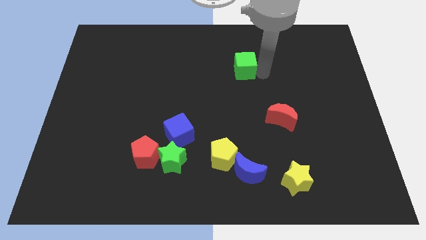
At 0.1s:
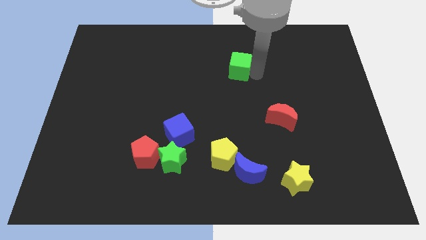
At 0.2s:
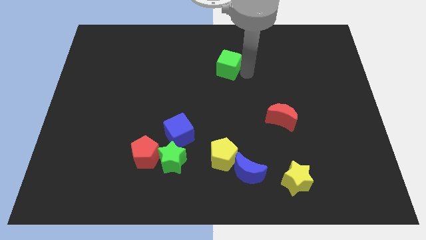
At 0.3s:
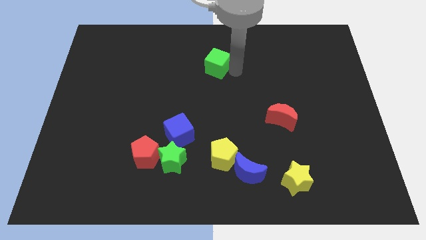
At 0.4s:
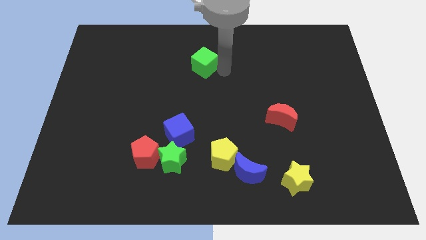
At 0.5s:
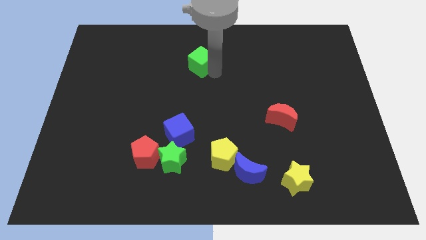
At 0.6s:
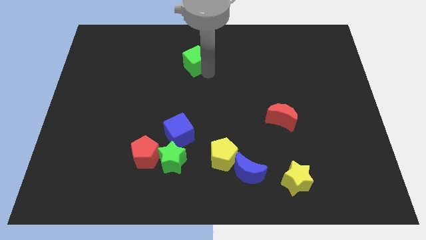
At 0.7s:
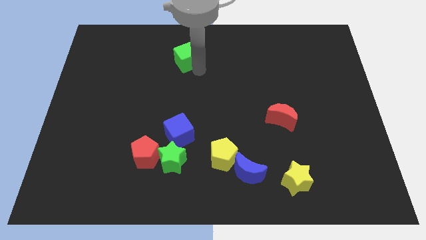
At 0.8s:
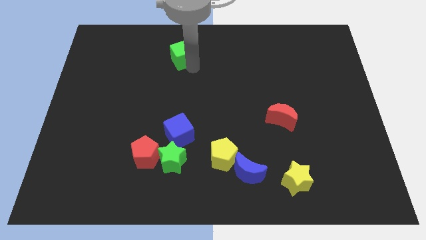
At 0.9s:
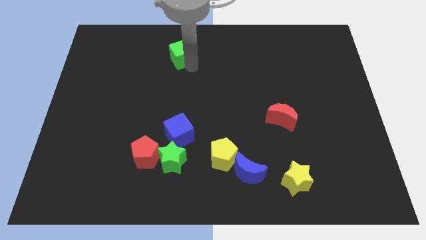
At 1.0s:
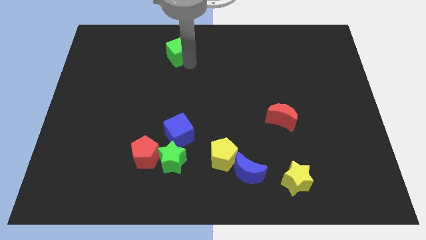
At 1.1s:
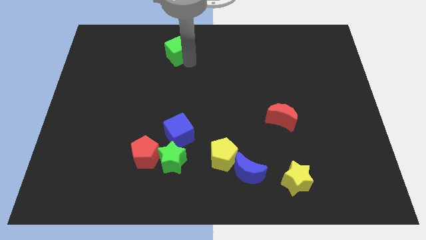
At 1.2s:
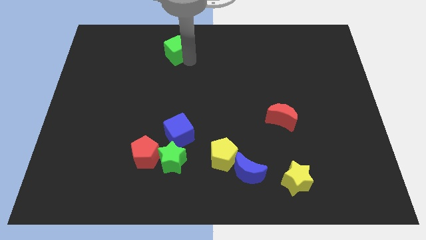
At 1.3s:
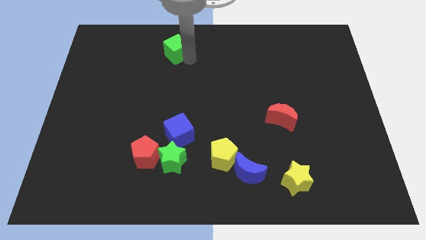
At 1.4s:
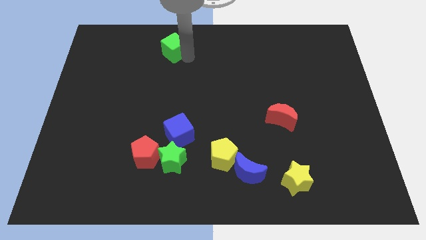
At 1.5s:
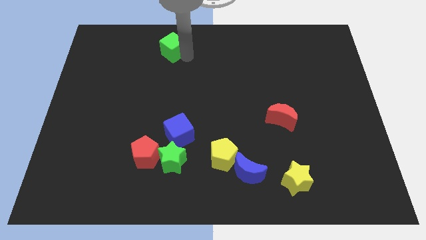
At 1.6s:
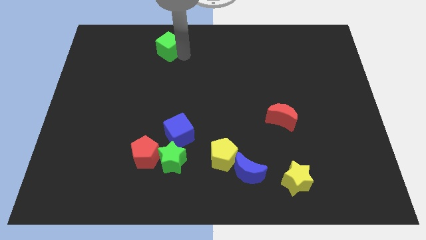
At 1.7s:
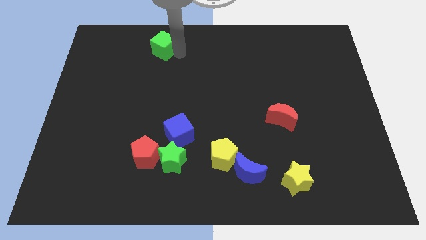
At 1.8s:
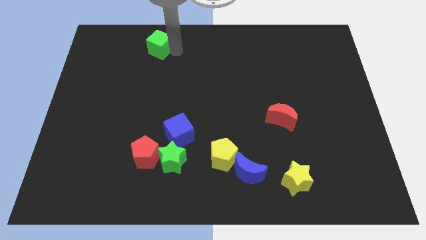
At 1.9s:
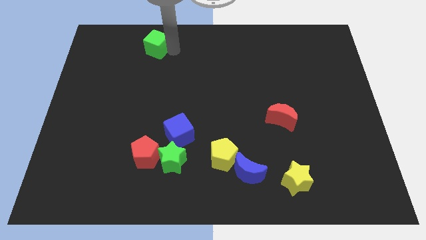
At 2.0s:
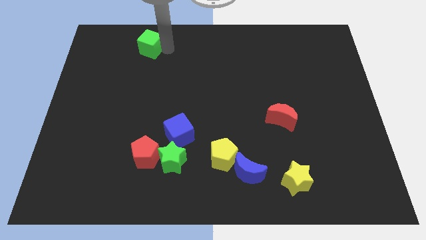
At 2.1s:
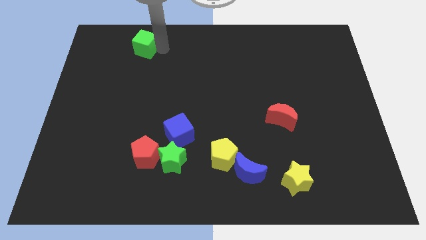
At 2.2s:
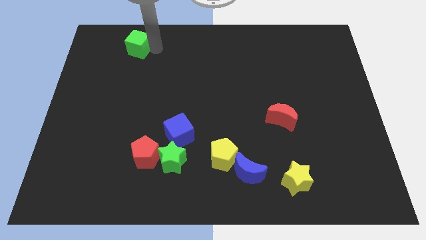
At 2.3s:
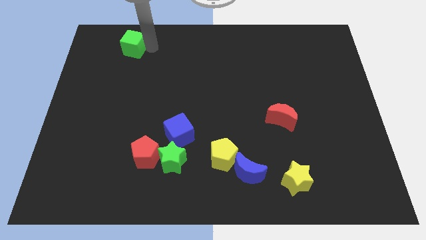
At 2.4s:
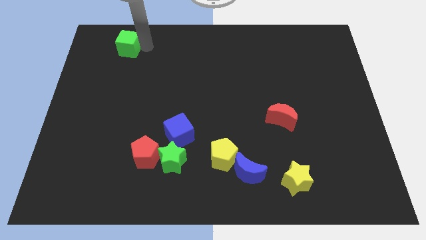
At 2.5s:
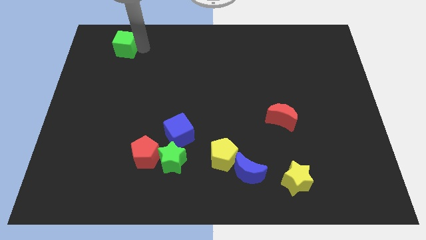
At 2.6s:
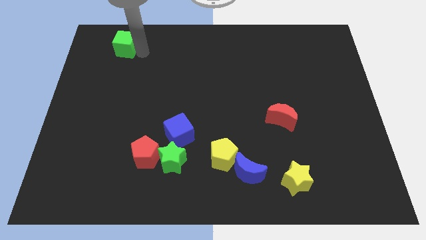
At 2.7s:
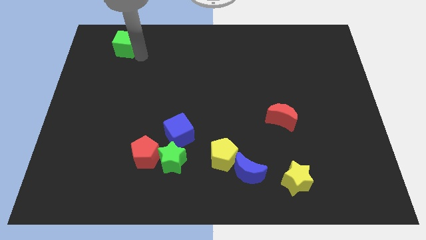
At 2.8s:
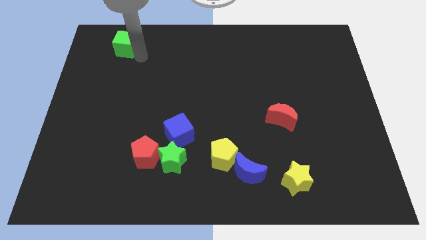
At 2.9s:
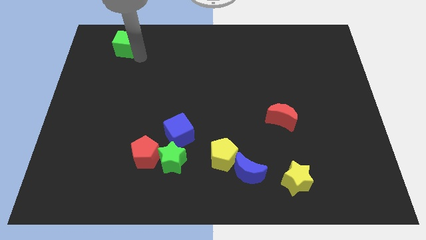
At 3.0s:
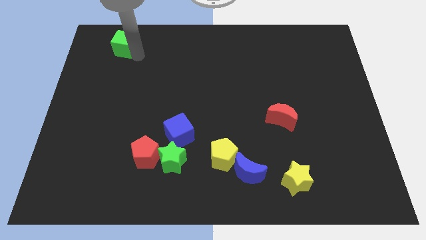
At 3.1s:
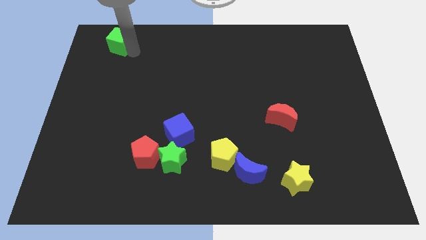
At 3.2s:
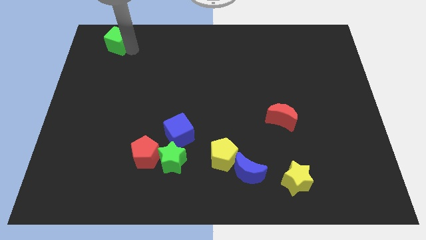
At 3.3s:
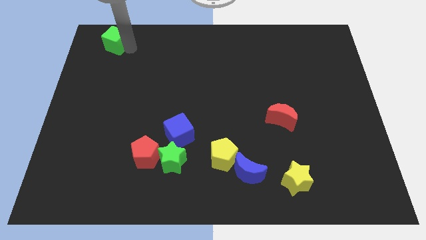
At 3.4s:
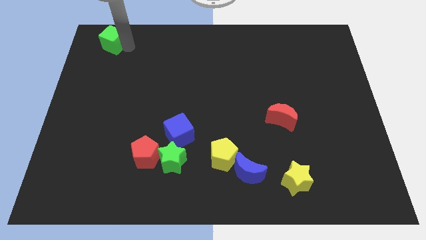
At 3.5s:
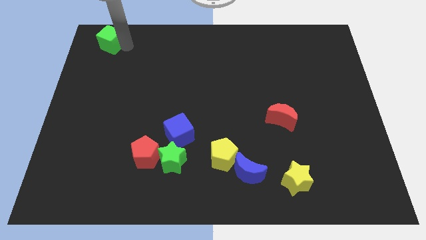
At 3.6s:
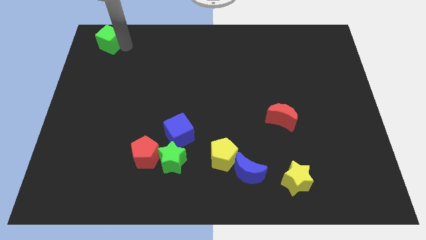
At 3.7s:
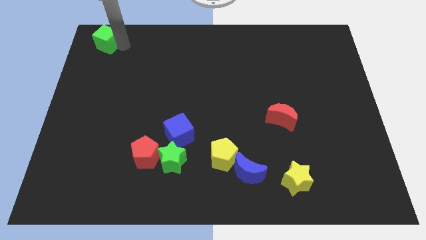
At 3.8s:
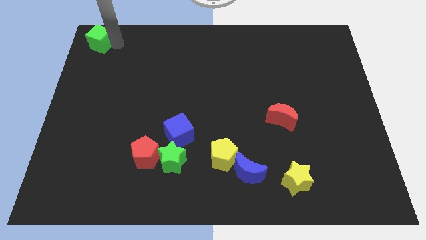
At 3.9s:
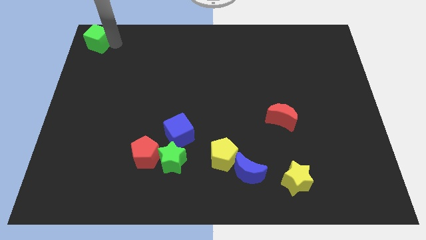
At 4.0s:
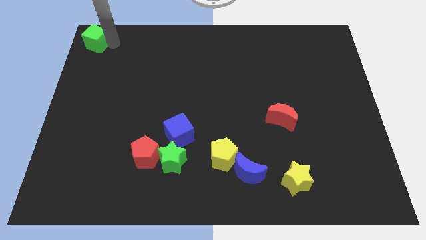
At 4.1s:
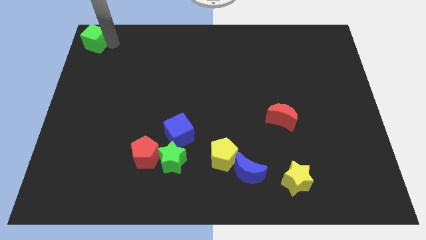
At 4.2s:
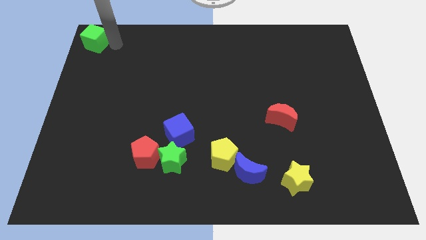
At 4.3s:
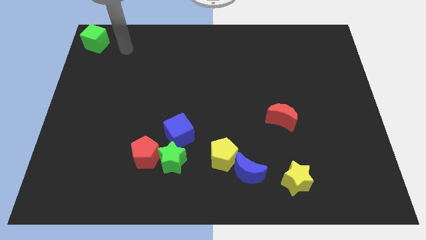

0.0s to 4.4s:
place the green cube to the top left corner of the board

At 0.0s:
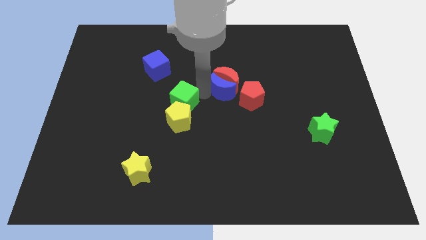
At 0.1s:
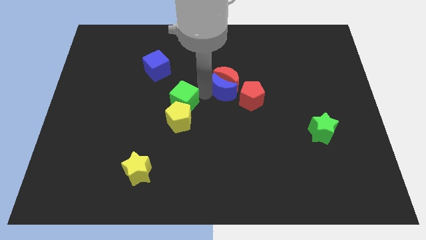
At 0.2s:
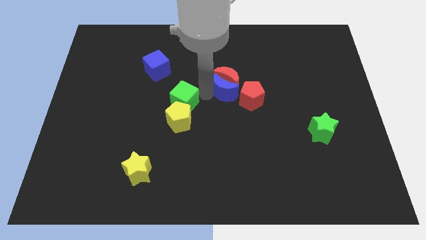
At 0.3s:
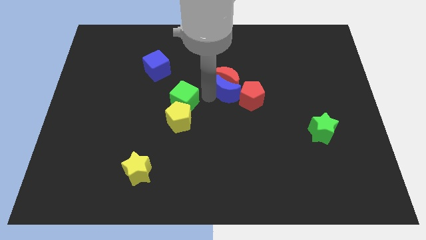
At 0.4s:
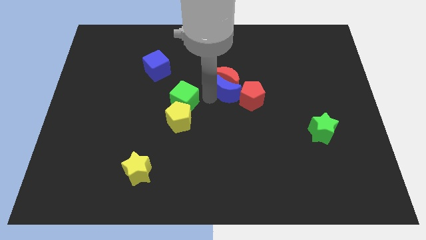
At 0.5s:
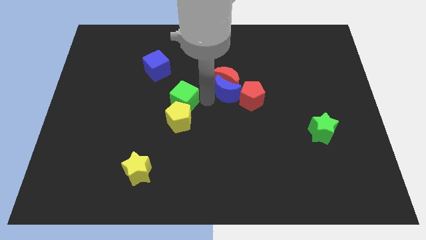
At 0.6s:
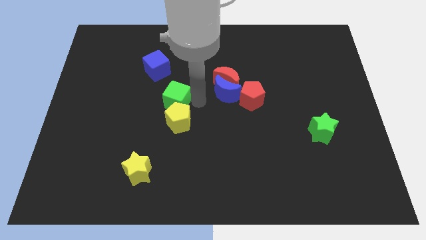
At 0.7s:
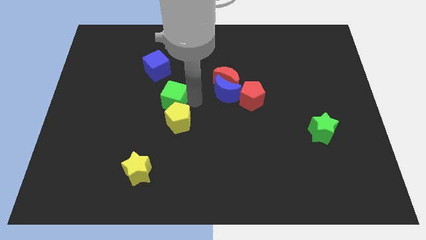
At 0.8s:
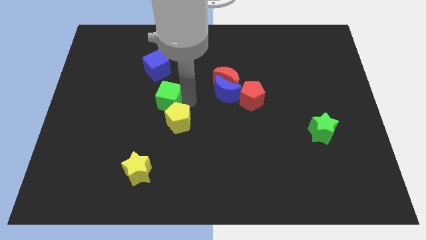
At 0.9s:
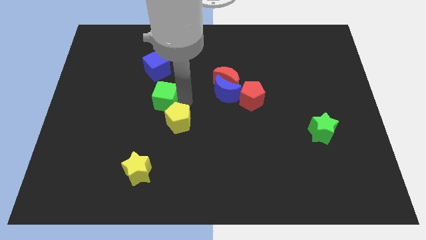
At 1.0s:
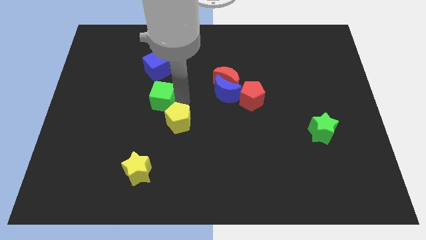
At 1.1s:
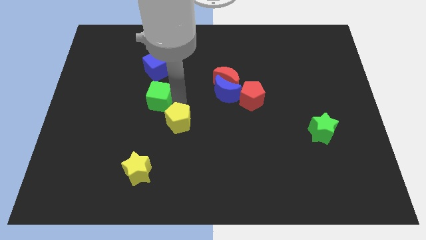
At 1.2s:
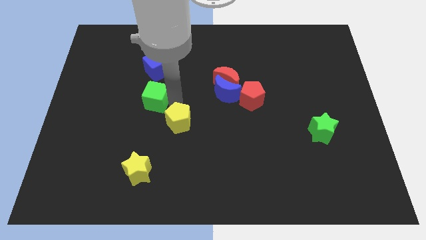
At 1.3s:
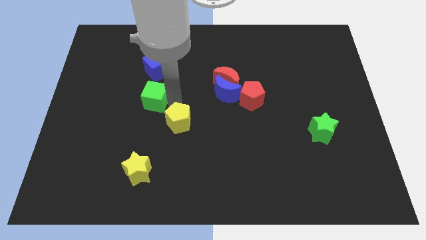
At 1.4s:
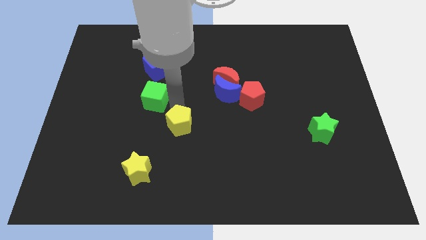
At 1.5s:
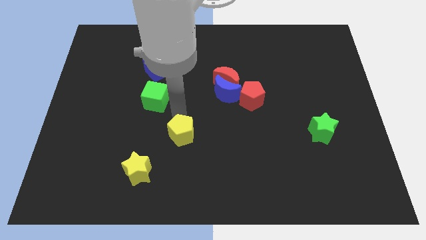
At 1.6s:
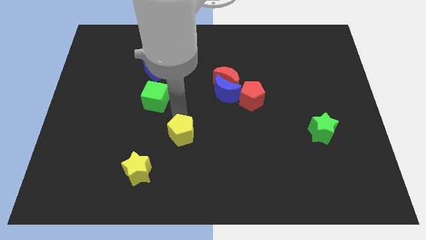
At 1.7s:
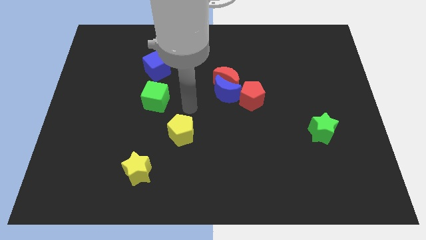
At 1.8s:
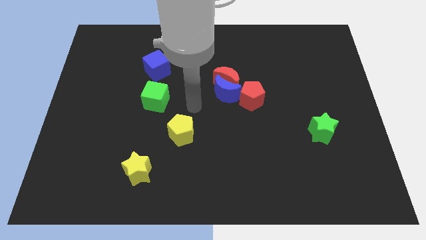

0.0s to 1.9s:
separate green cube and the yellow pentagon

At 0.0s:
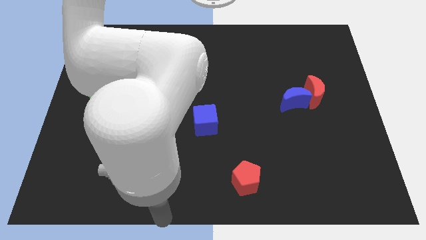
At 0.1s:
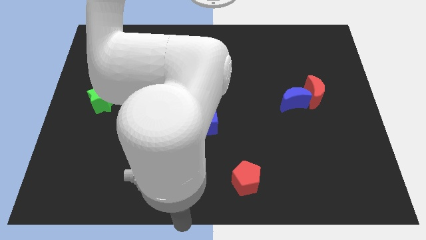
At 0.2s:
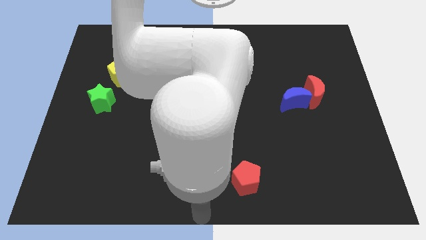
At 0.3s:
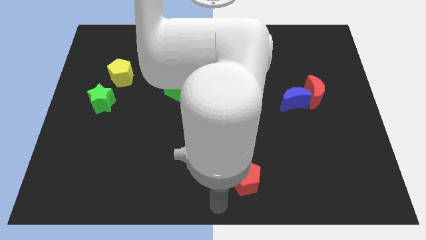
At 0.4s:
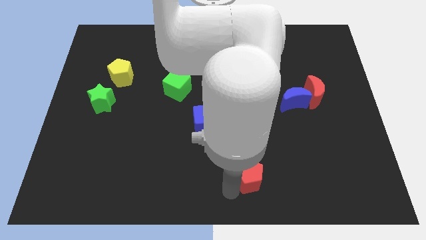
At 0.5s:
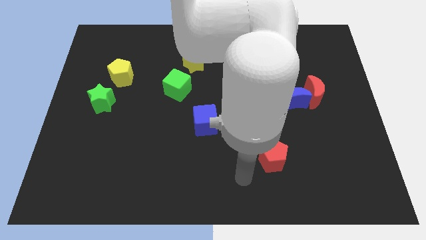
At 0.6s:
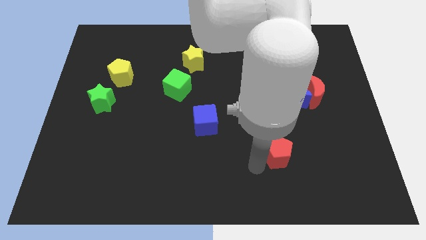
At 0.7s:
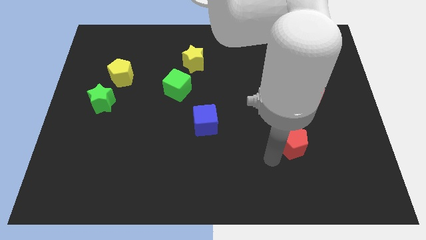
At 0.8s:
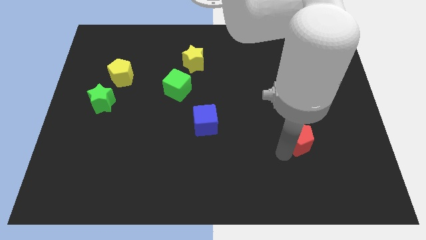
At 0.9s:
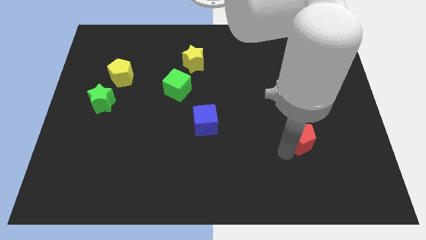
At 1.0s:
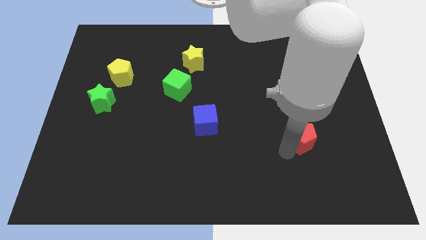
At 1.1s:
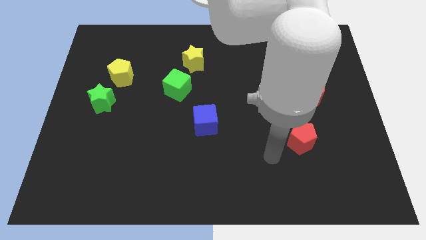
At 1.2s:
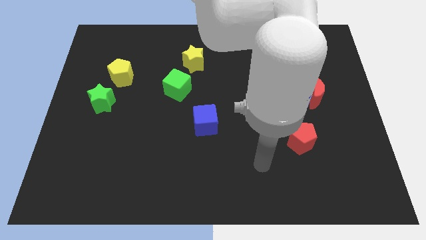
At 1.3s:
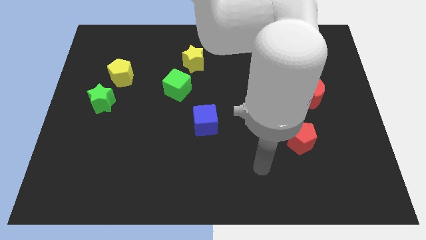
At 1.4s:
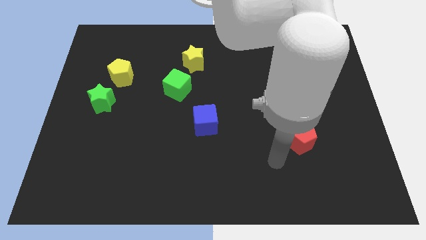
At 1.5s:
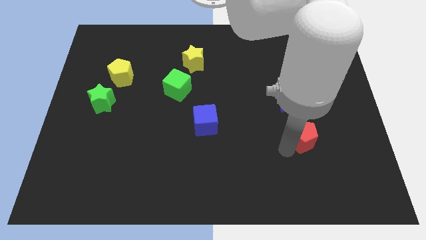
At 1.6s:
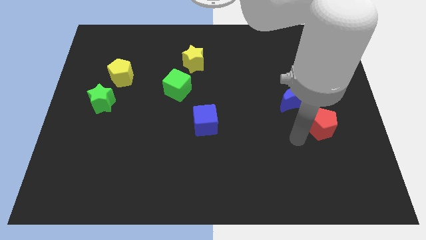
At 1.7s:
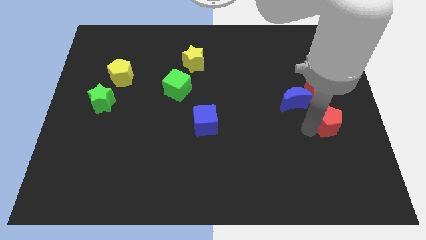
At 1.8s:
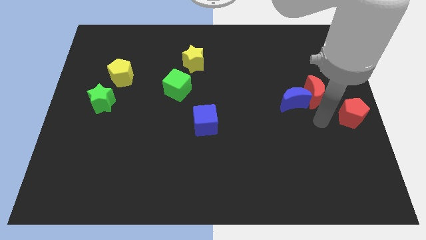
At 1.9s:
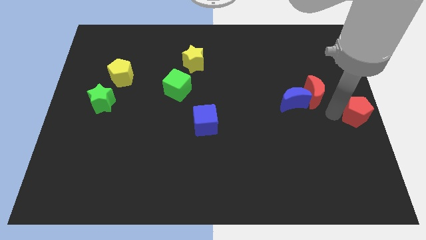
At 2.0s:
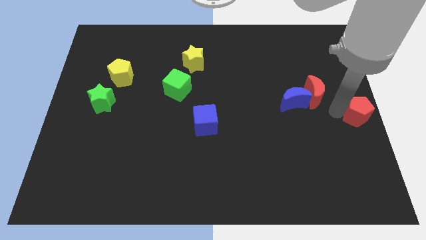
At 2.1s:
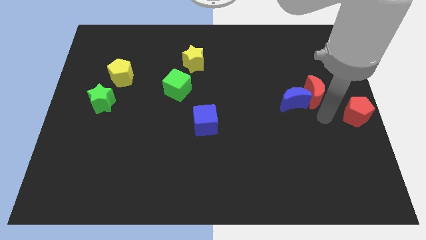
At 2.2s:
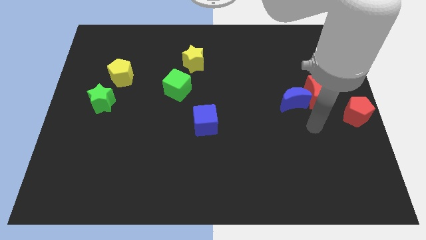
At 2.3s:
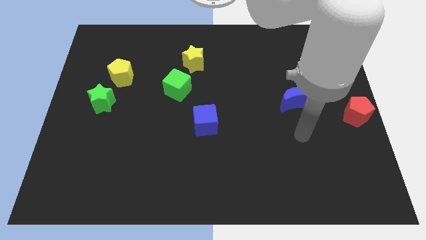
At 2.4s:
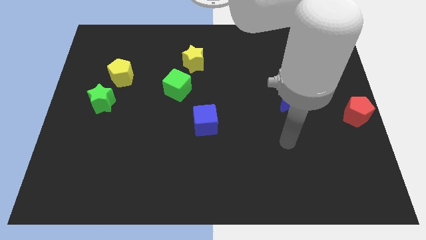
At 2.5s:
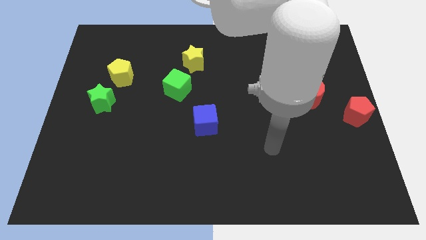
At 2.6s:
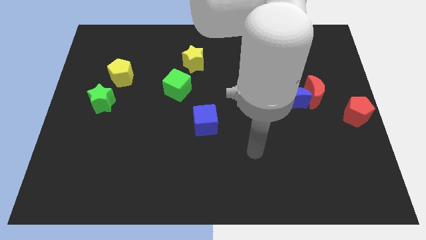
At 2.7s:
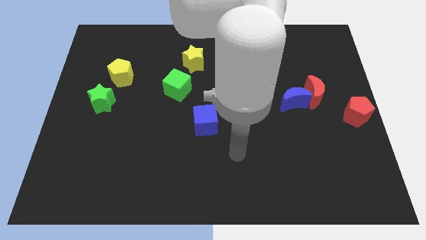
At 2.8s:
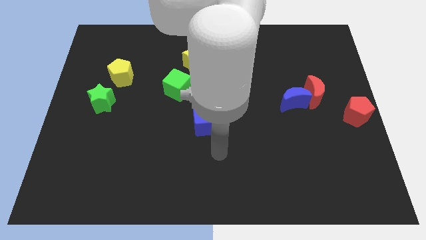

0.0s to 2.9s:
place the red pentagon adjacent to the red moon
